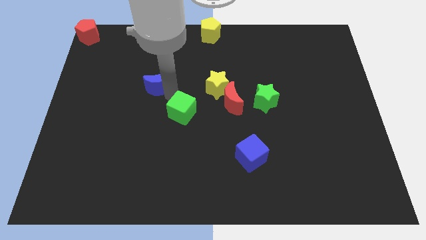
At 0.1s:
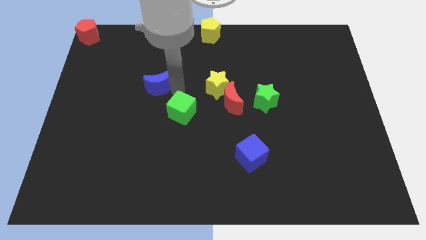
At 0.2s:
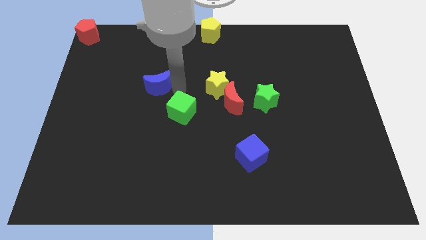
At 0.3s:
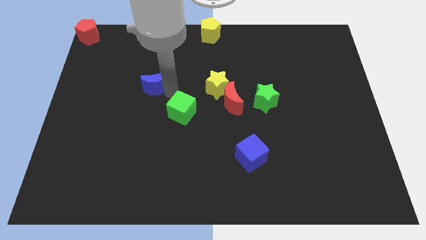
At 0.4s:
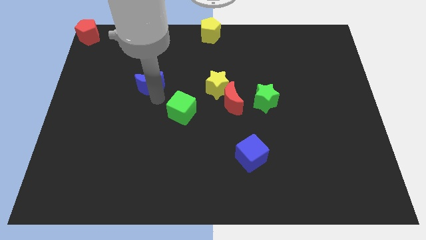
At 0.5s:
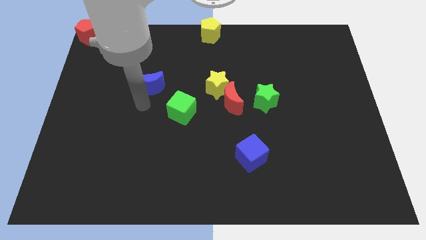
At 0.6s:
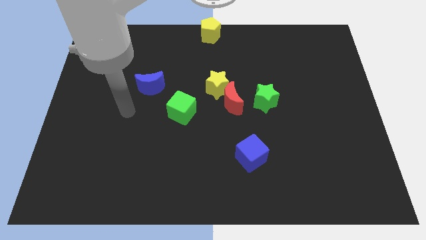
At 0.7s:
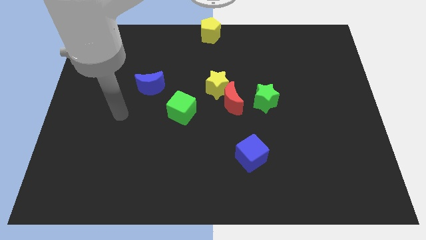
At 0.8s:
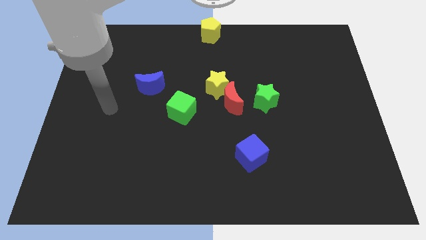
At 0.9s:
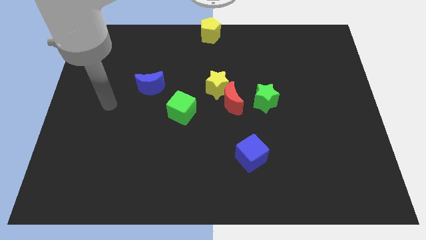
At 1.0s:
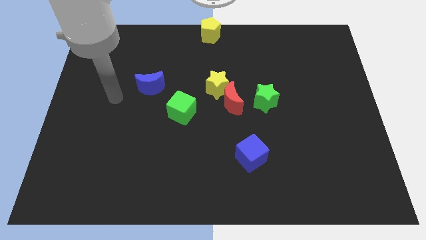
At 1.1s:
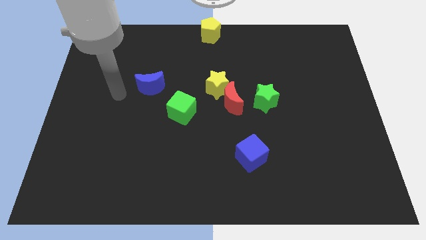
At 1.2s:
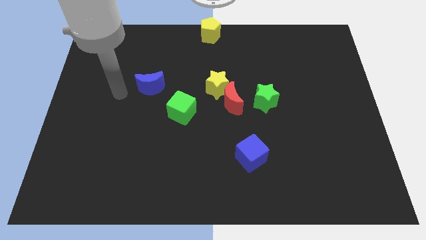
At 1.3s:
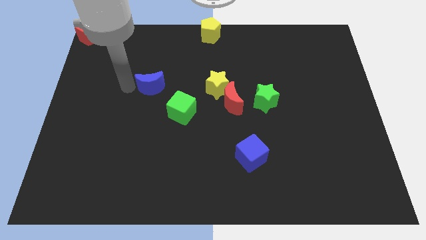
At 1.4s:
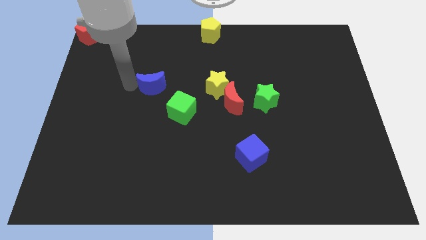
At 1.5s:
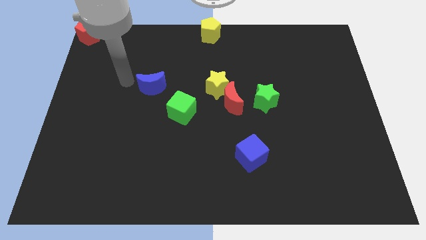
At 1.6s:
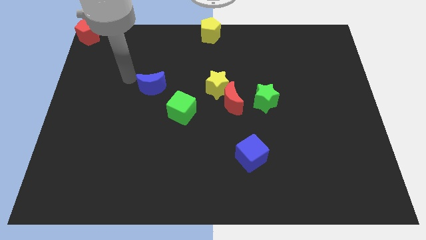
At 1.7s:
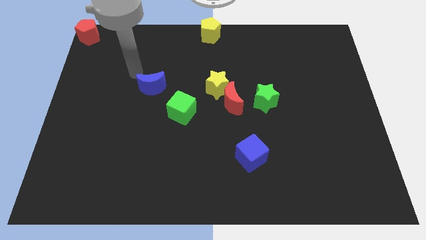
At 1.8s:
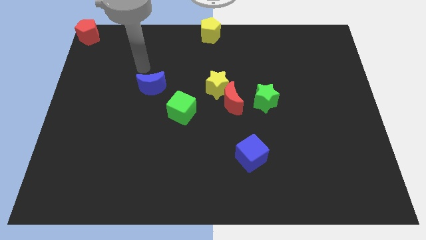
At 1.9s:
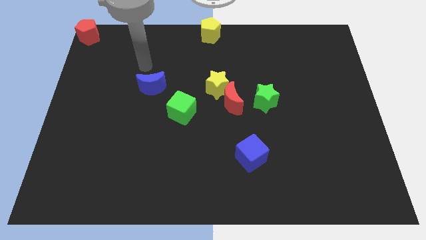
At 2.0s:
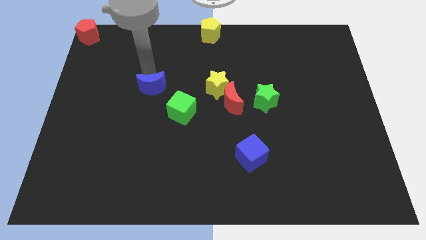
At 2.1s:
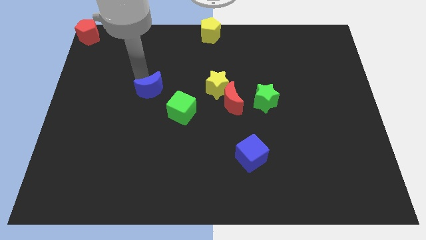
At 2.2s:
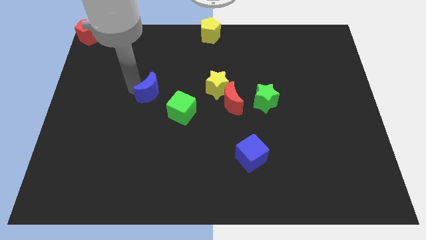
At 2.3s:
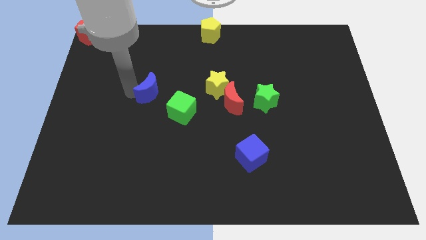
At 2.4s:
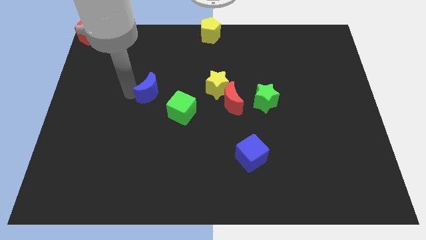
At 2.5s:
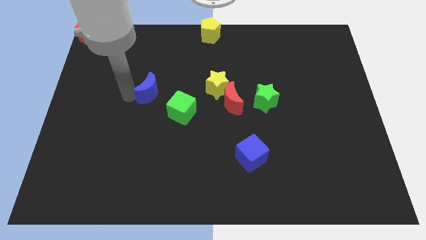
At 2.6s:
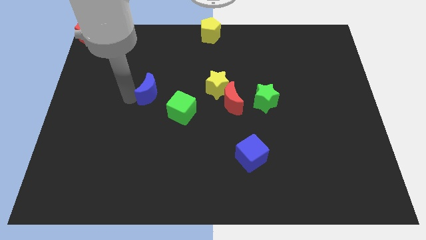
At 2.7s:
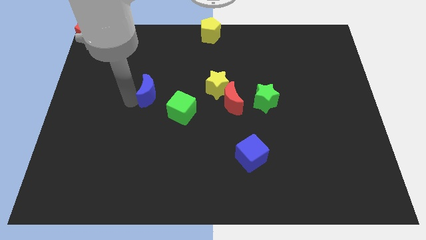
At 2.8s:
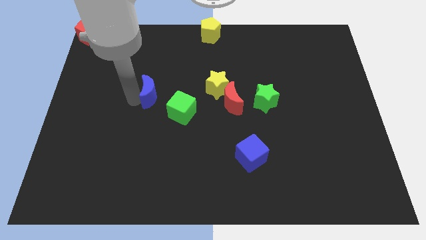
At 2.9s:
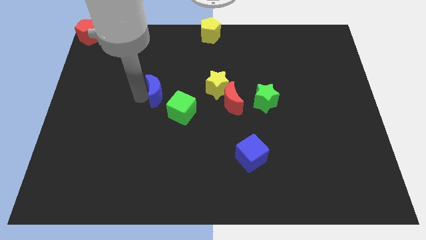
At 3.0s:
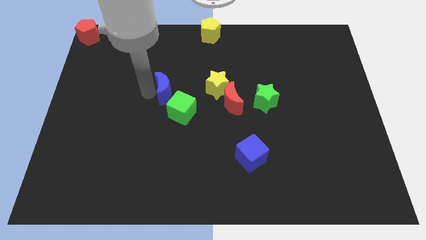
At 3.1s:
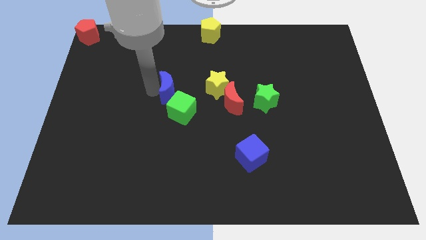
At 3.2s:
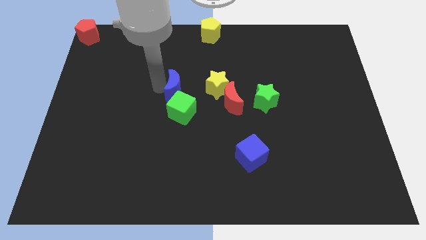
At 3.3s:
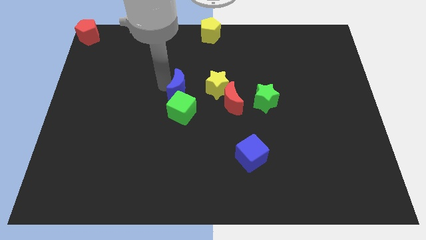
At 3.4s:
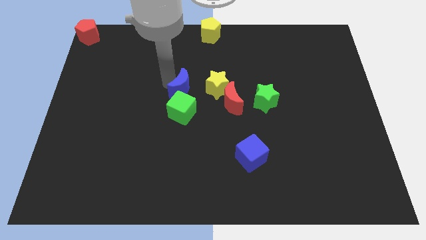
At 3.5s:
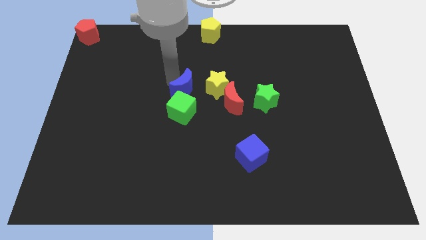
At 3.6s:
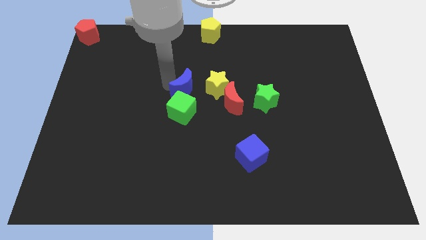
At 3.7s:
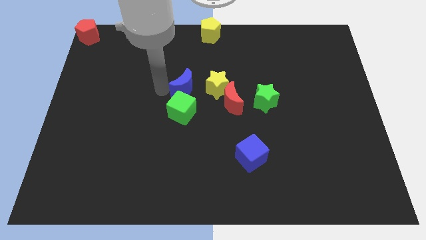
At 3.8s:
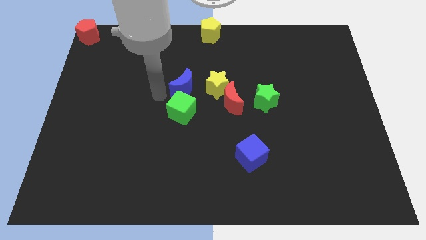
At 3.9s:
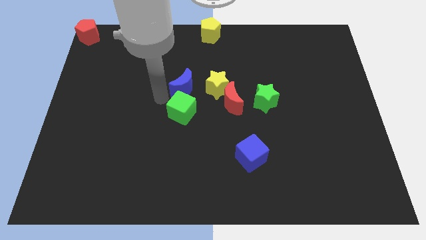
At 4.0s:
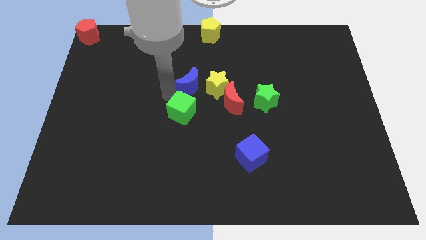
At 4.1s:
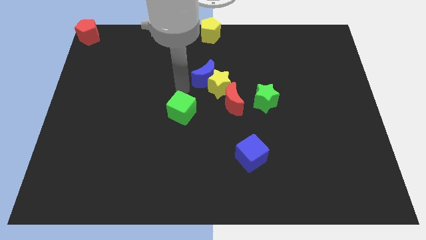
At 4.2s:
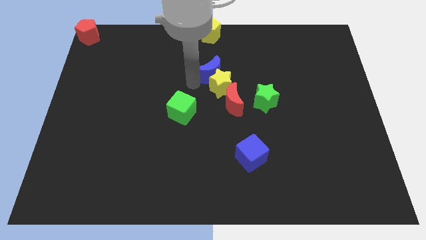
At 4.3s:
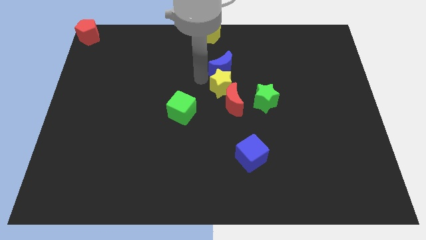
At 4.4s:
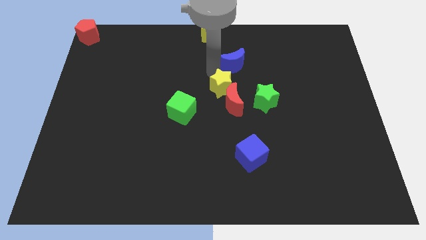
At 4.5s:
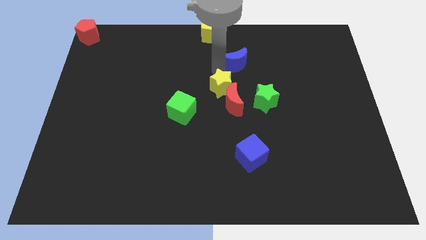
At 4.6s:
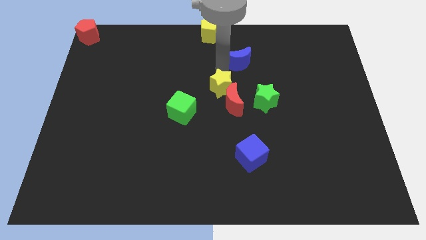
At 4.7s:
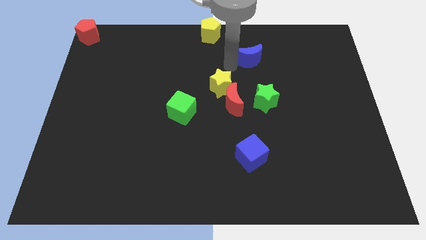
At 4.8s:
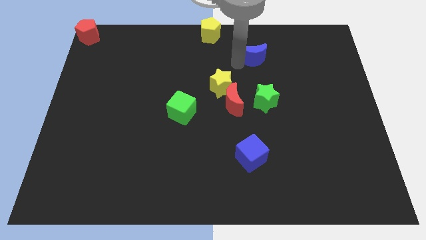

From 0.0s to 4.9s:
move the blue moon to the top right of yellow star

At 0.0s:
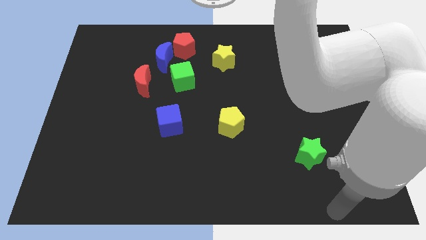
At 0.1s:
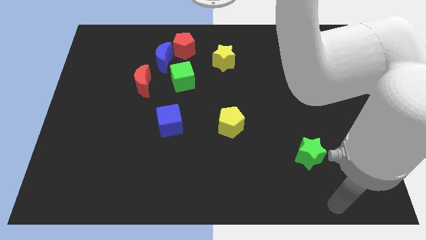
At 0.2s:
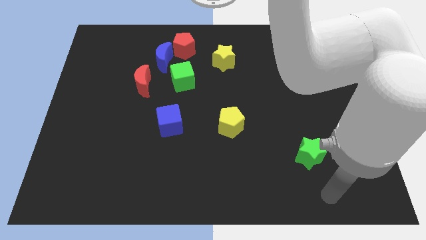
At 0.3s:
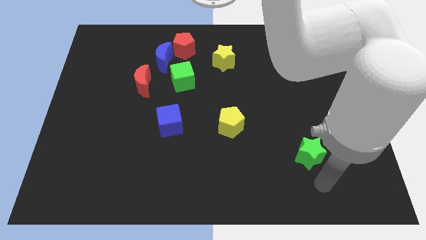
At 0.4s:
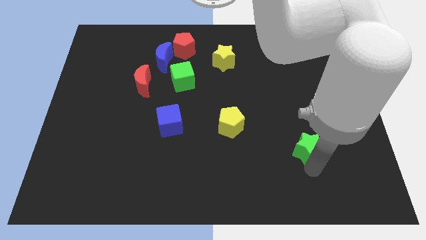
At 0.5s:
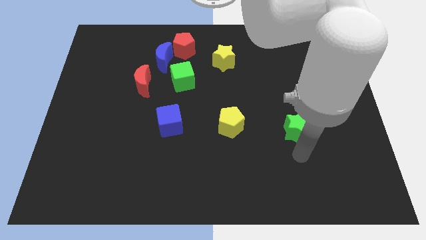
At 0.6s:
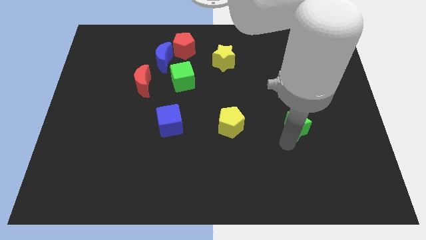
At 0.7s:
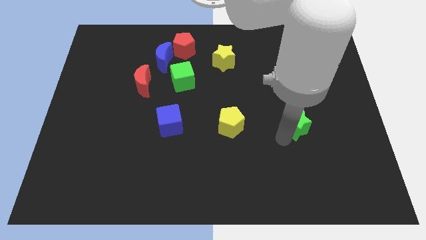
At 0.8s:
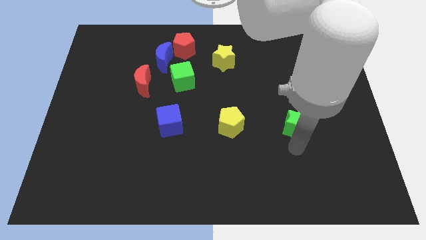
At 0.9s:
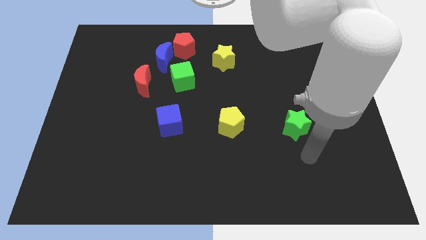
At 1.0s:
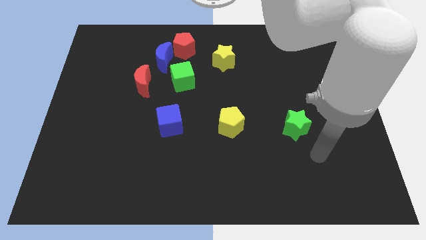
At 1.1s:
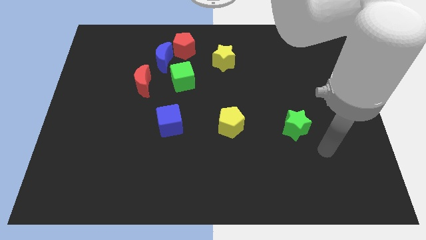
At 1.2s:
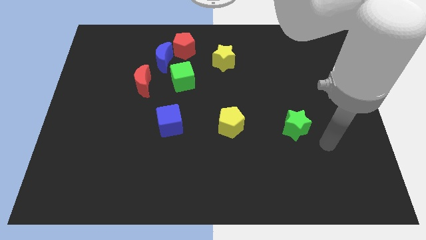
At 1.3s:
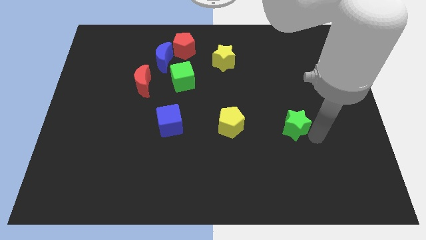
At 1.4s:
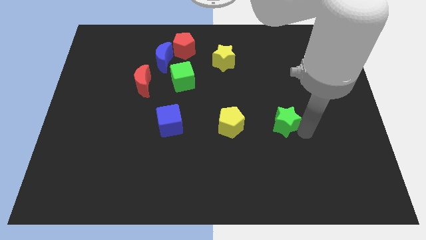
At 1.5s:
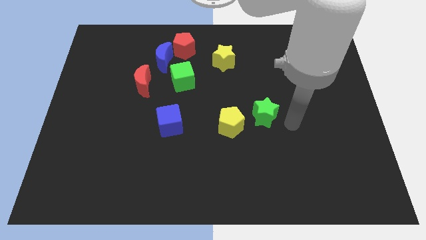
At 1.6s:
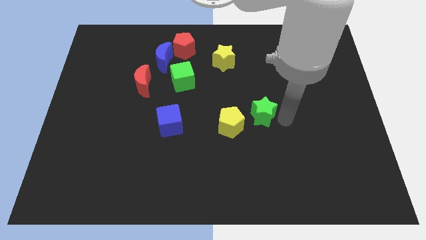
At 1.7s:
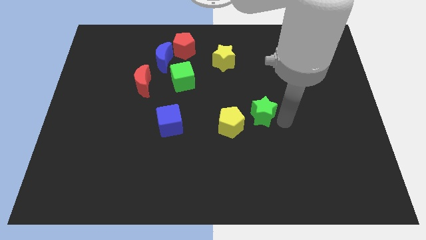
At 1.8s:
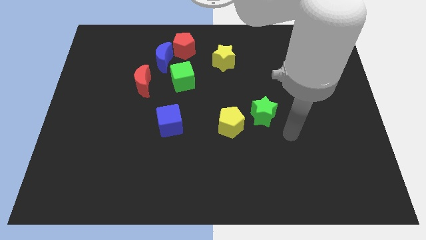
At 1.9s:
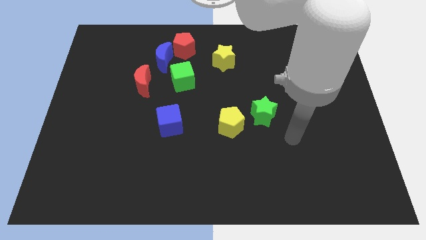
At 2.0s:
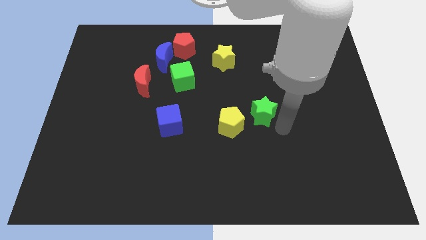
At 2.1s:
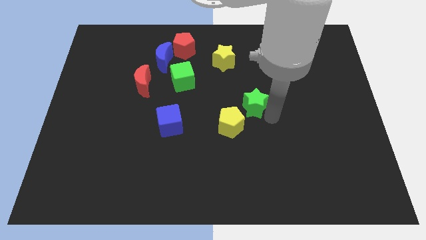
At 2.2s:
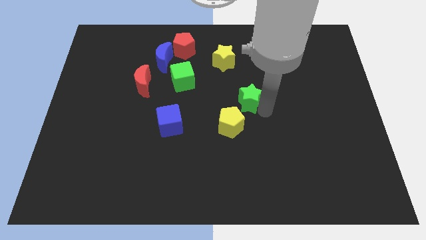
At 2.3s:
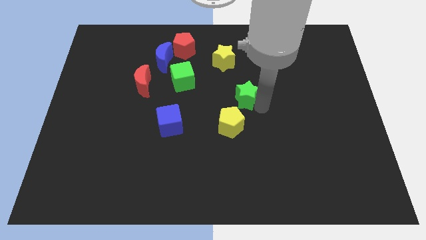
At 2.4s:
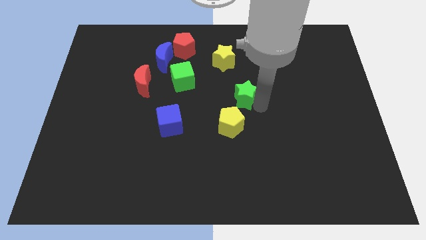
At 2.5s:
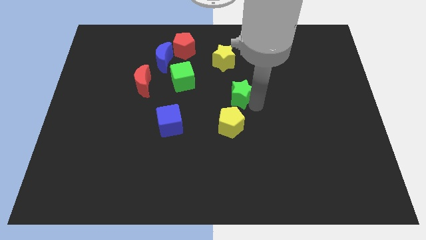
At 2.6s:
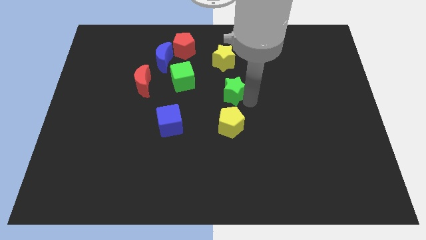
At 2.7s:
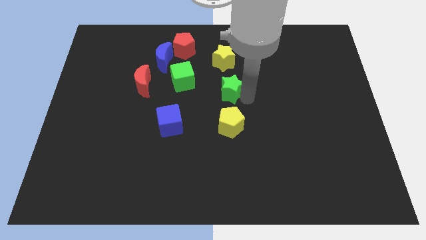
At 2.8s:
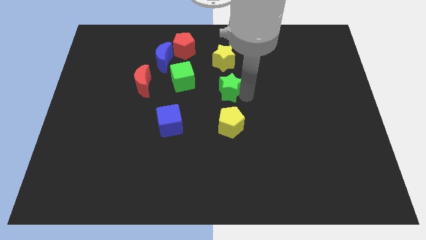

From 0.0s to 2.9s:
move the green star to the top of the yellow pentagon

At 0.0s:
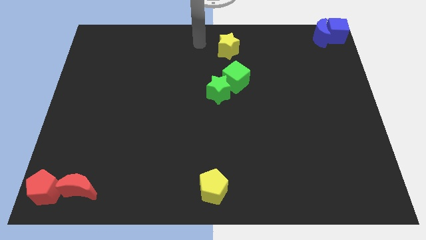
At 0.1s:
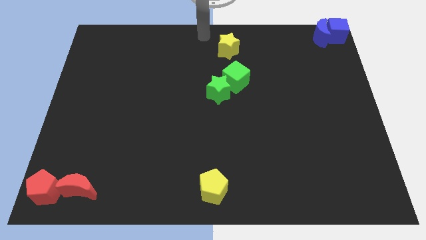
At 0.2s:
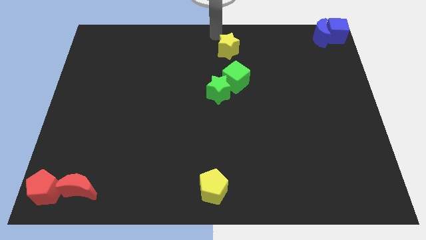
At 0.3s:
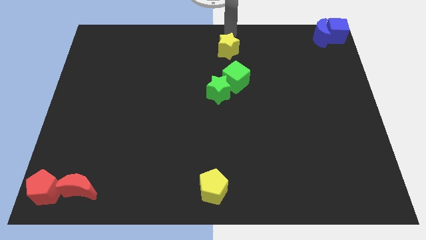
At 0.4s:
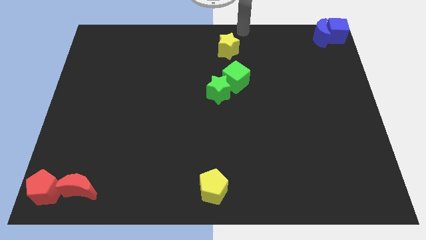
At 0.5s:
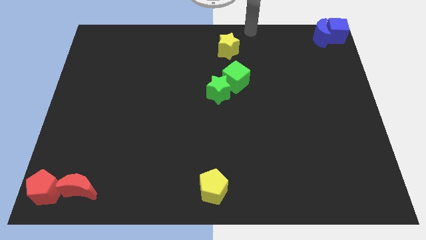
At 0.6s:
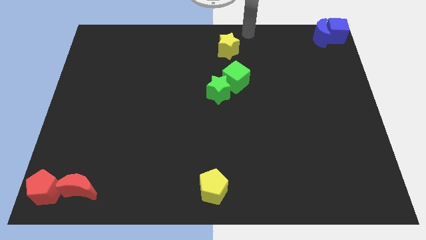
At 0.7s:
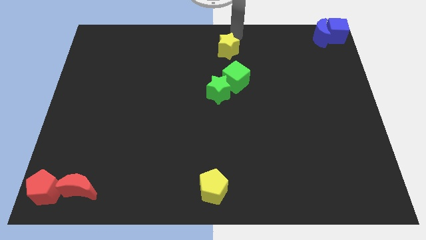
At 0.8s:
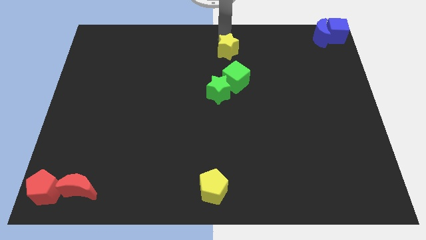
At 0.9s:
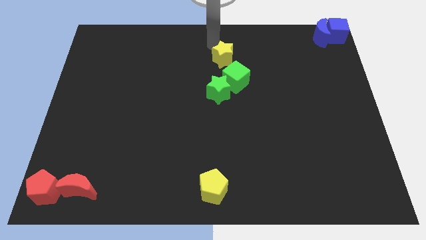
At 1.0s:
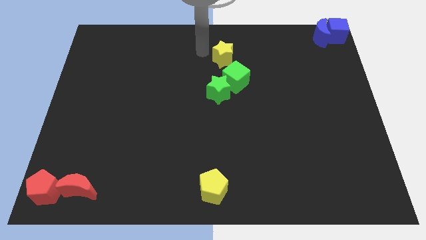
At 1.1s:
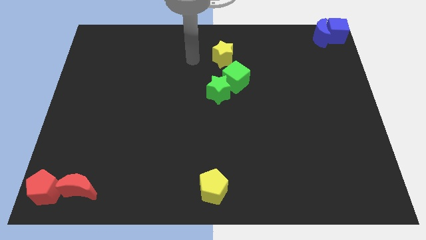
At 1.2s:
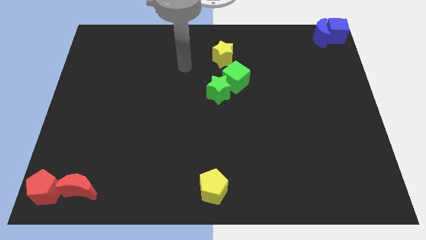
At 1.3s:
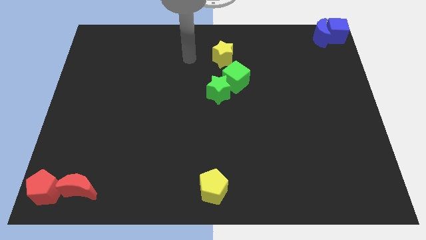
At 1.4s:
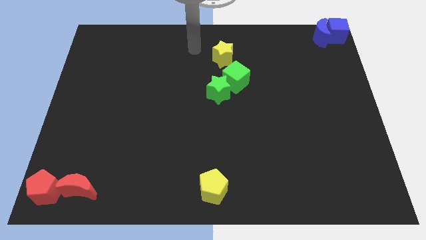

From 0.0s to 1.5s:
move the yellow star slightly towards the top of the green cube
